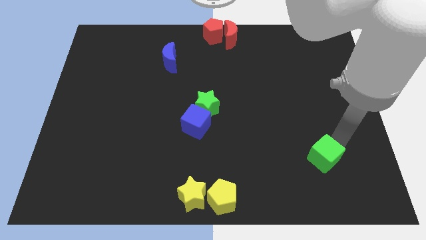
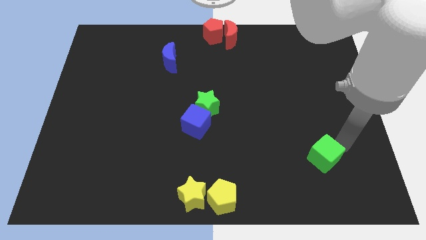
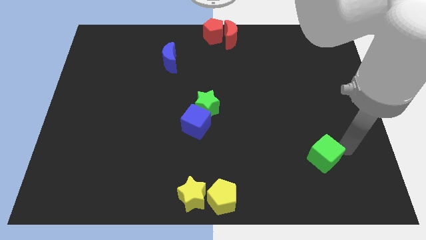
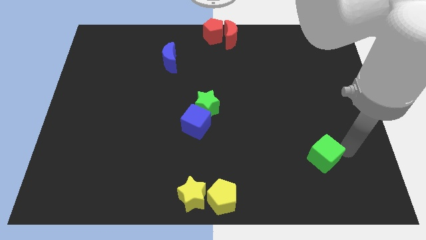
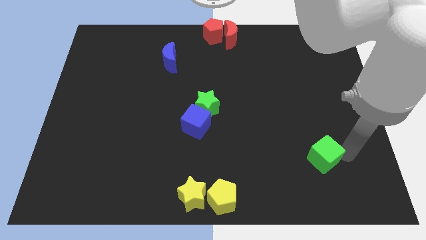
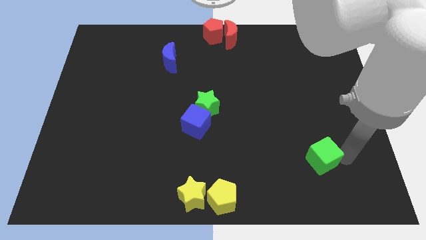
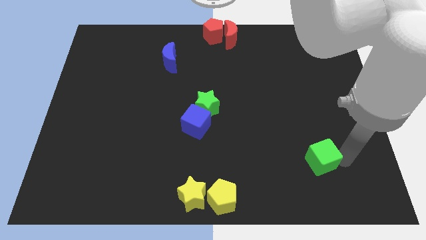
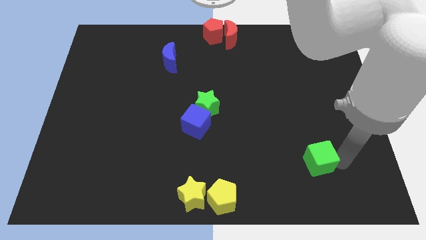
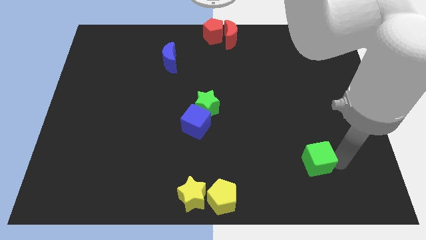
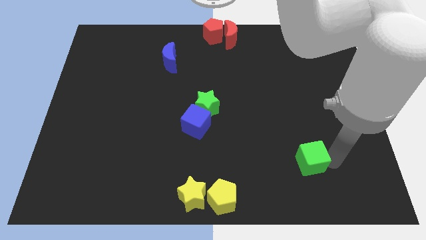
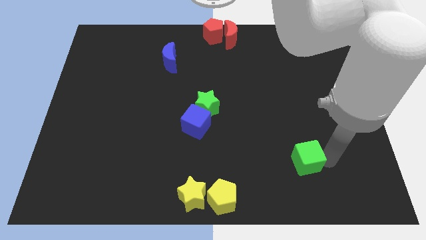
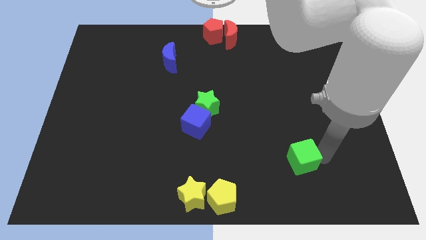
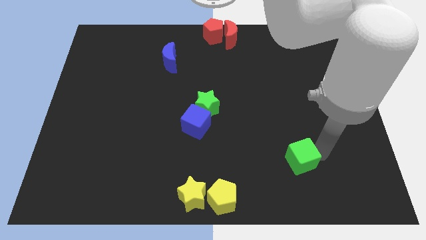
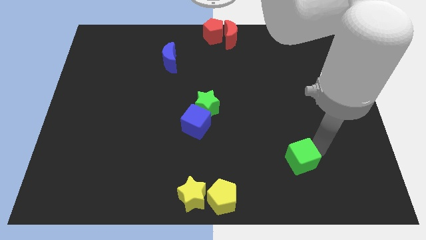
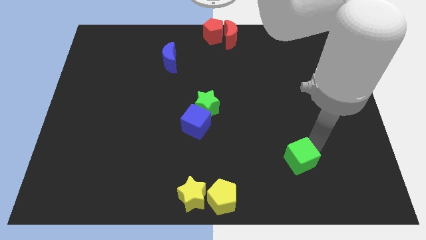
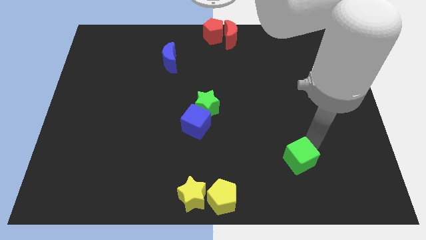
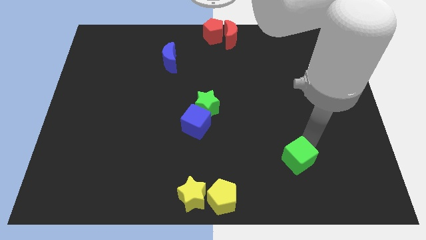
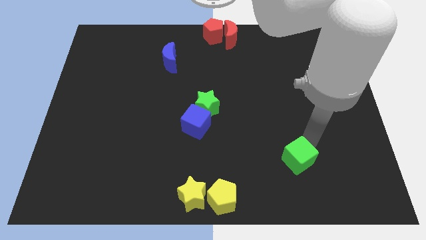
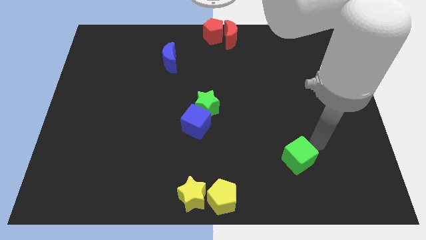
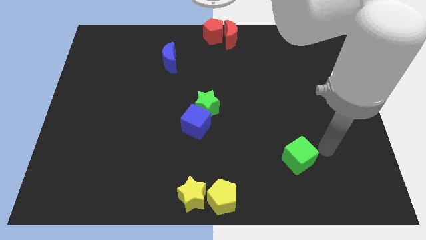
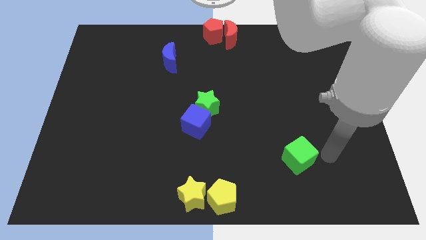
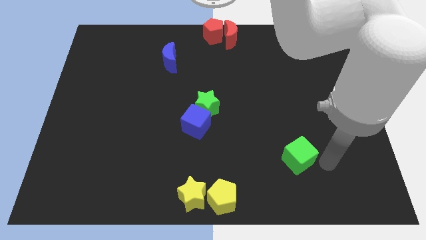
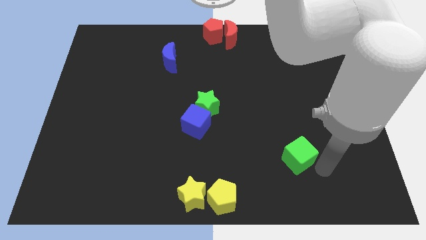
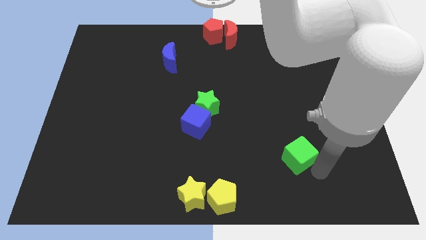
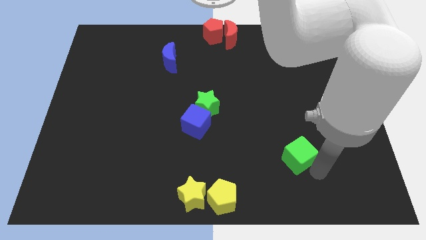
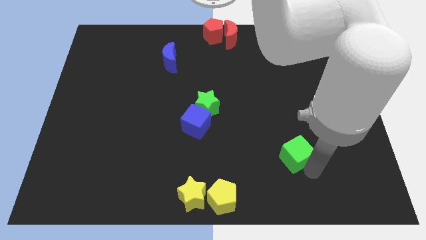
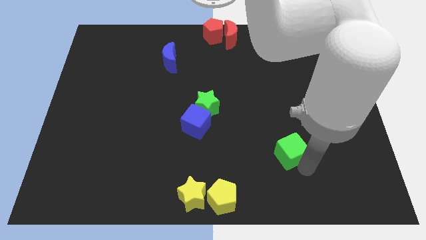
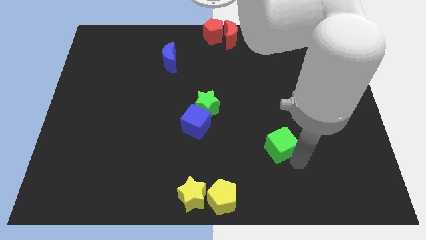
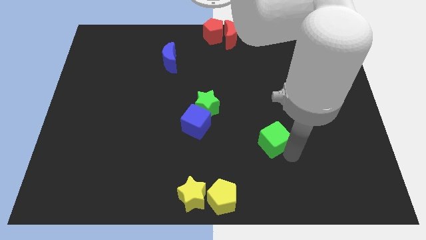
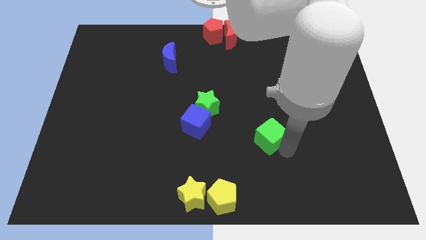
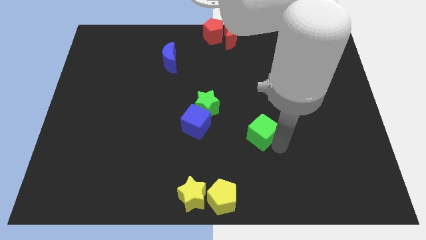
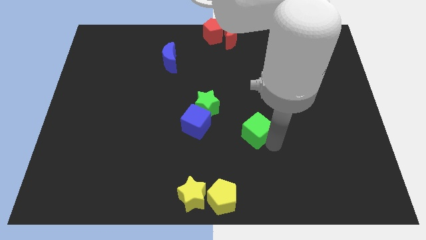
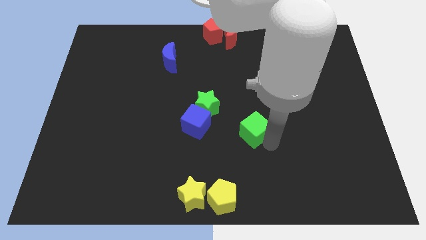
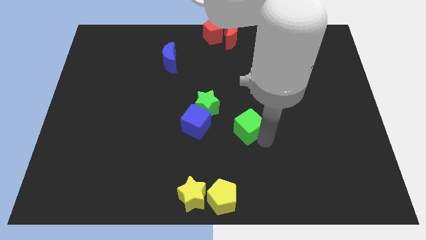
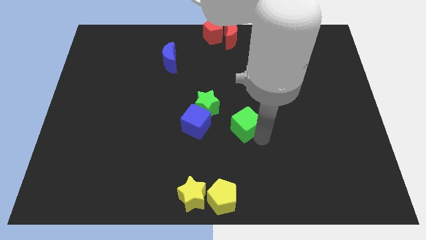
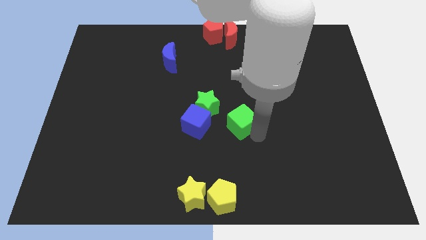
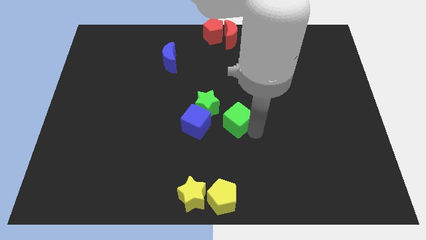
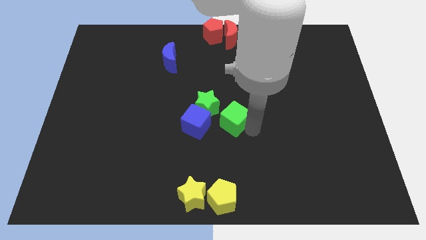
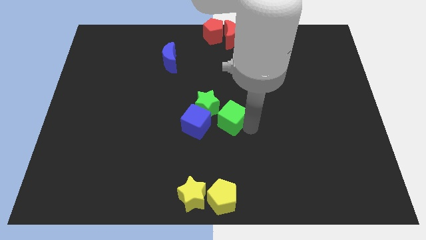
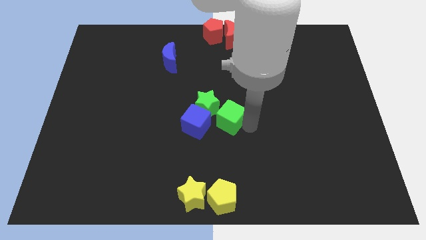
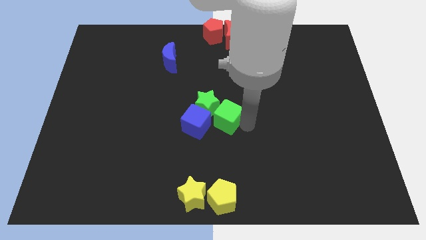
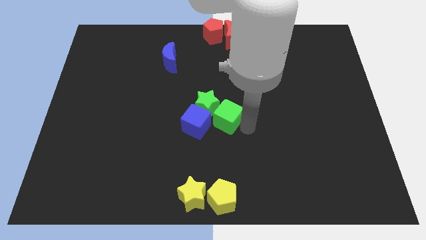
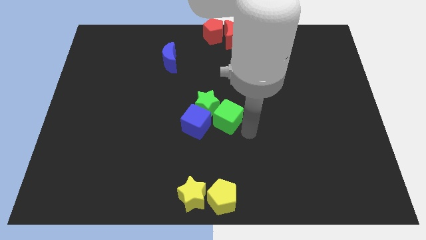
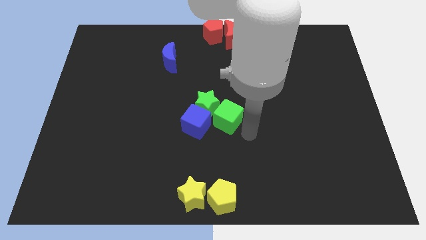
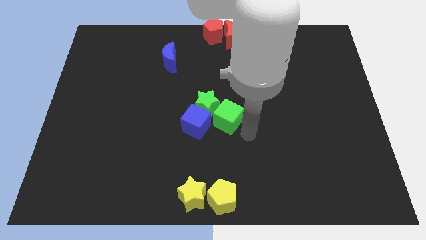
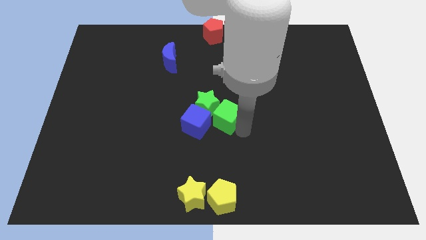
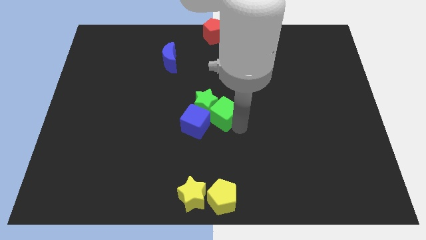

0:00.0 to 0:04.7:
move the green cube to the bottom right of the green star

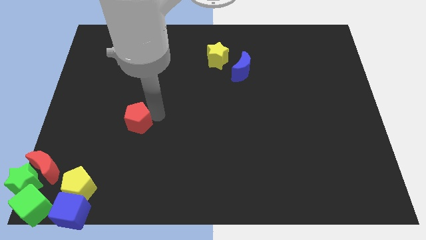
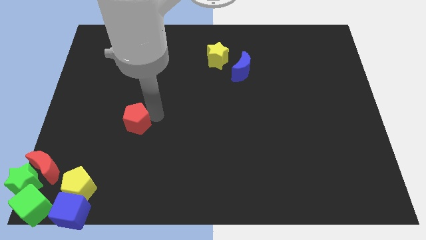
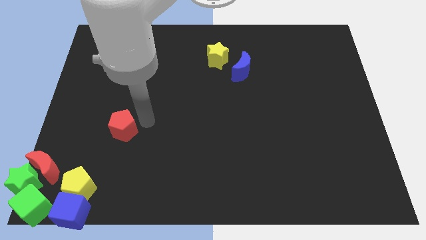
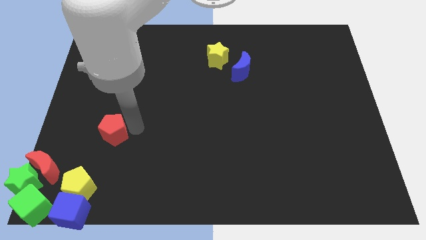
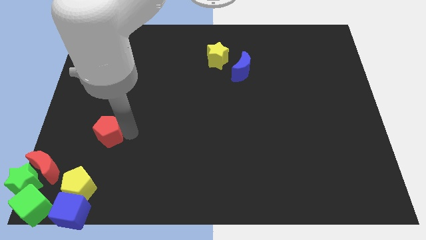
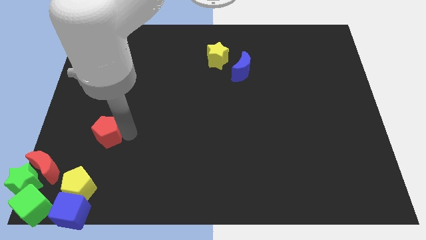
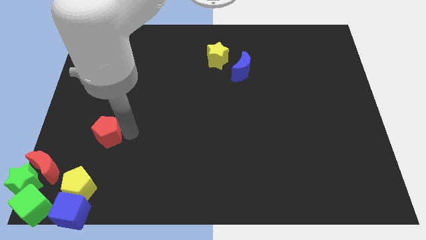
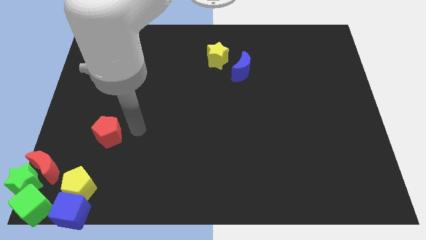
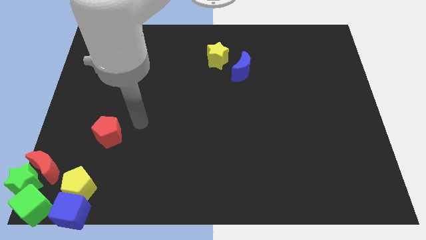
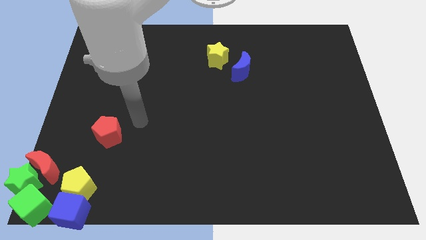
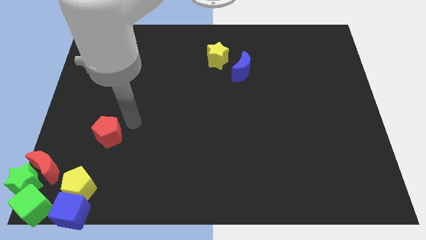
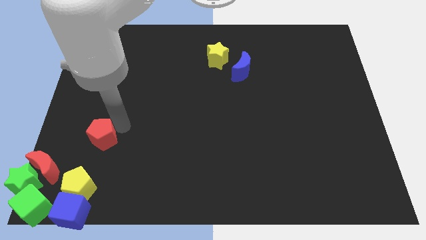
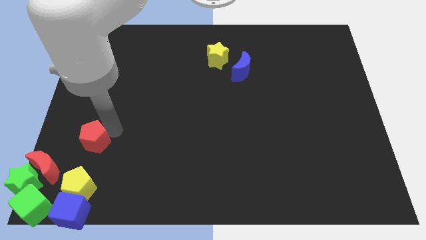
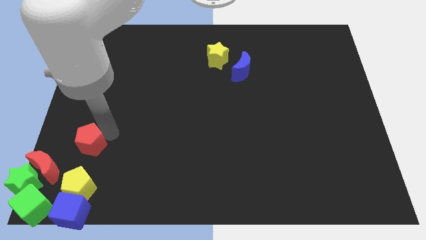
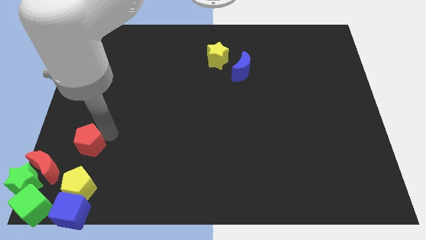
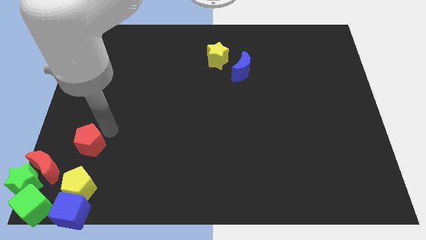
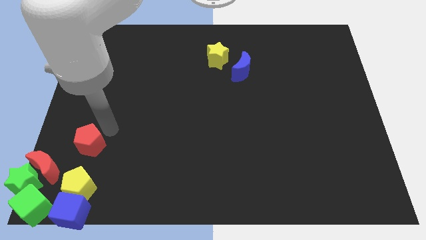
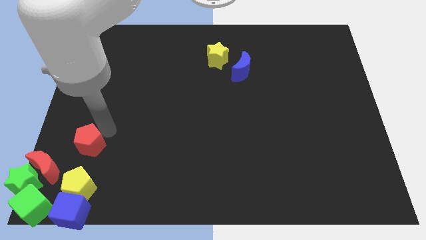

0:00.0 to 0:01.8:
move red pentagon towards the red crescent

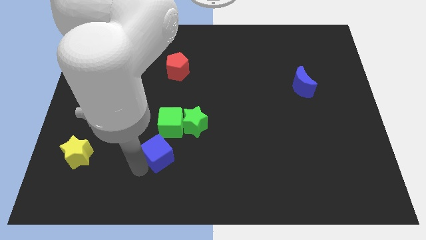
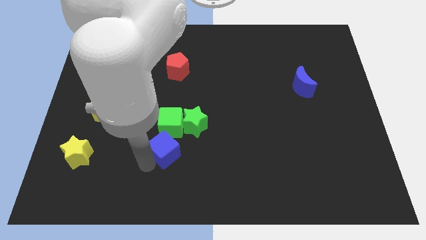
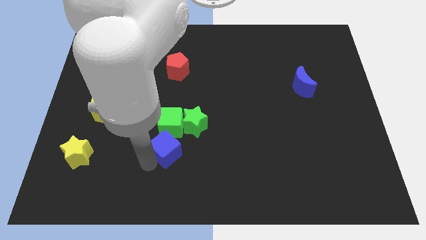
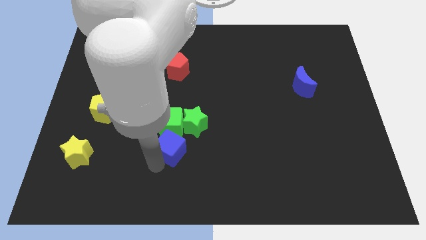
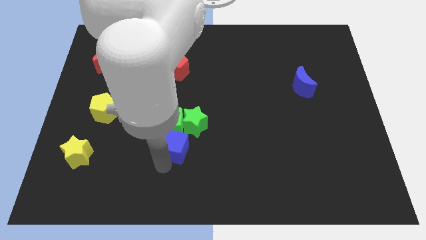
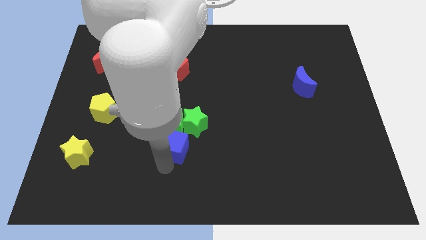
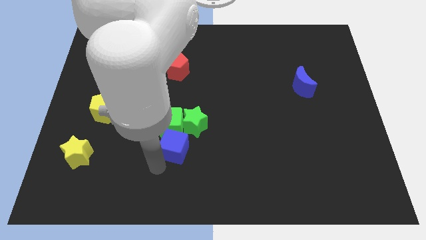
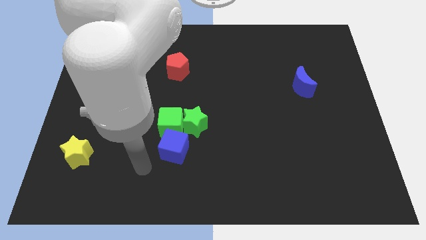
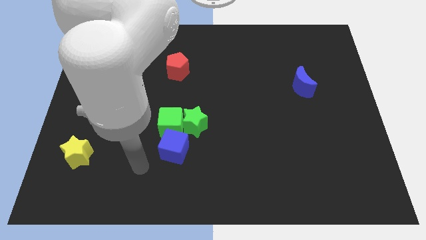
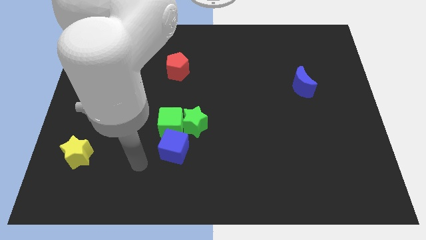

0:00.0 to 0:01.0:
move blue cube at the bottom of green cube

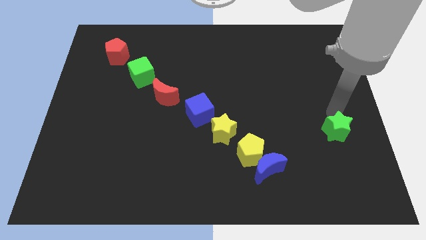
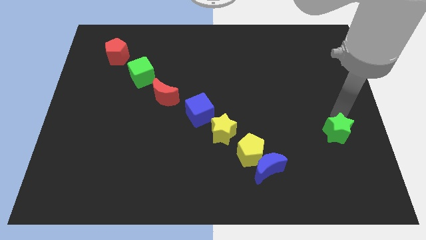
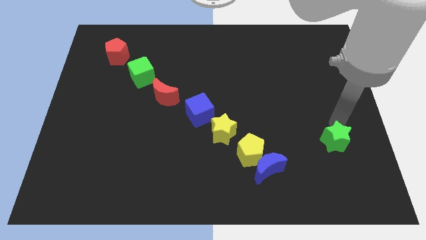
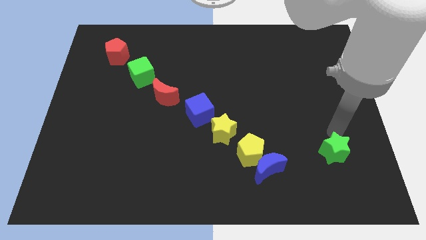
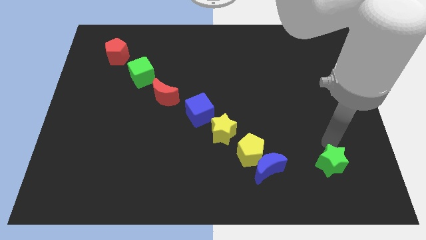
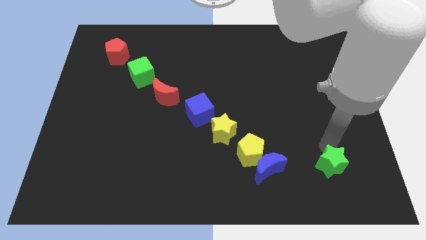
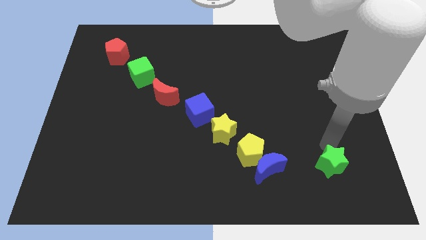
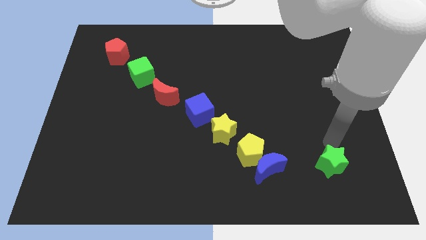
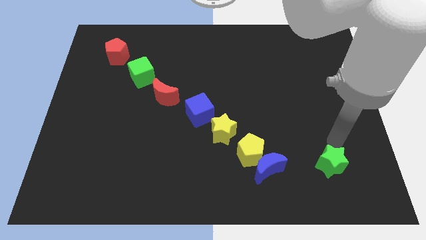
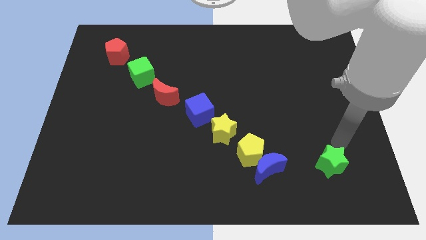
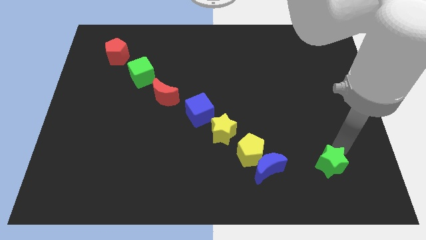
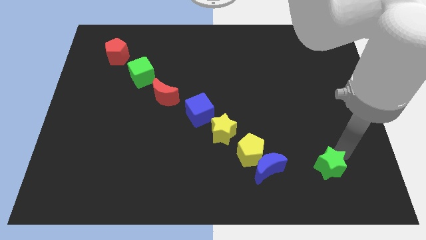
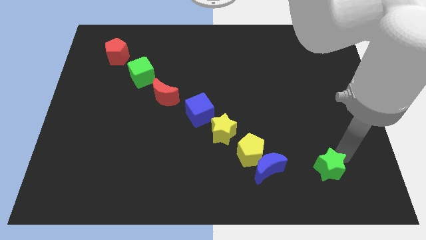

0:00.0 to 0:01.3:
place the green star to the right of the blue moon

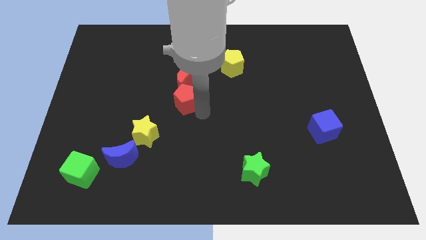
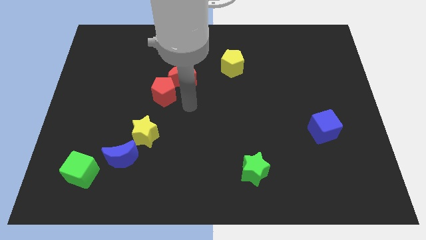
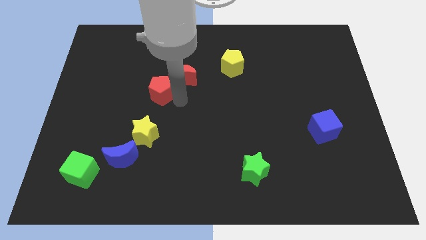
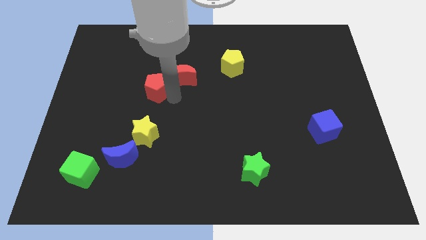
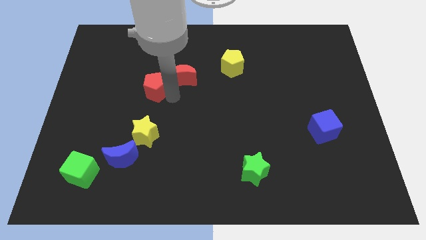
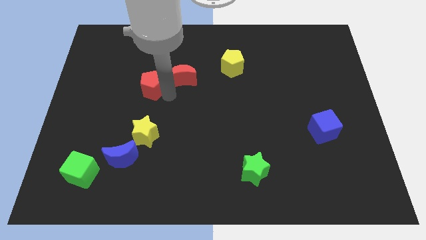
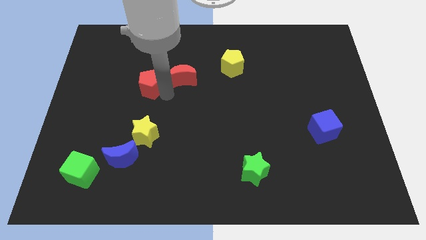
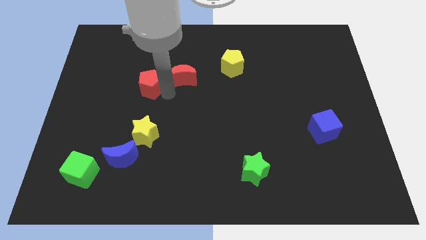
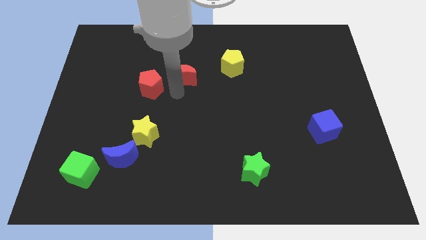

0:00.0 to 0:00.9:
push the red pentagon upward
